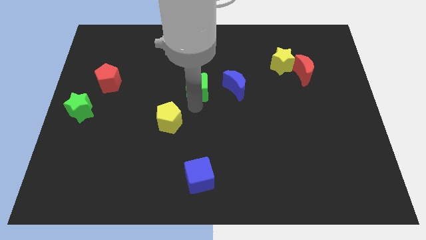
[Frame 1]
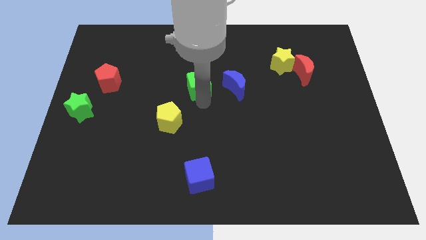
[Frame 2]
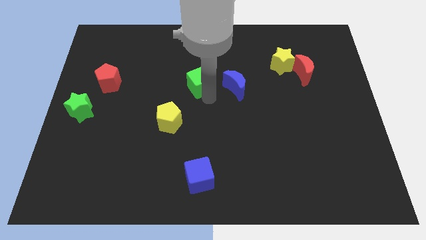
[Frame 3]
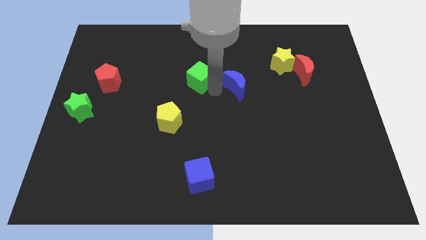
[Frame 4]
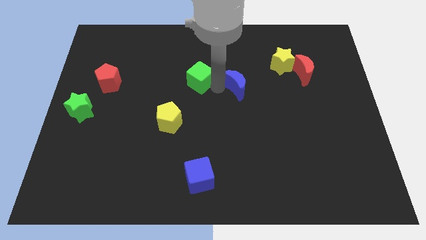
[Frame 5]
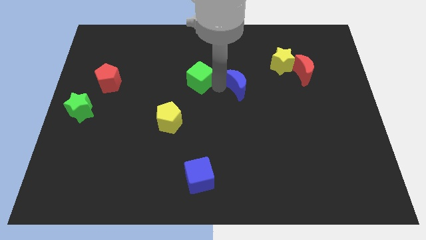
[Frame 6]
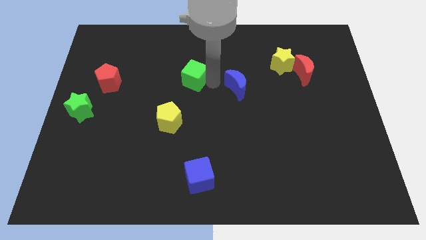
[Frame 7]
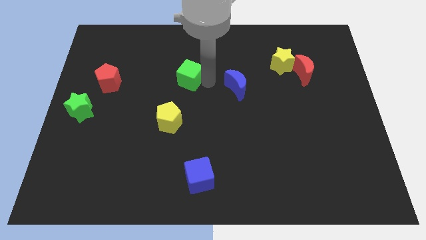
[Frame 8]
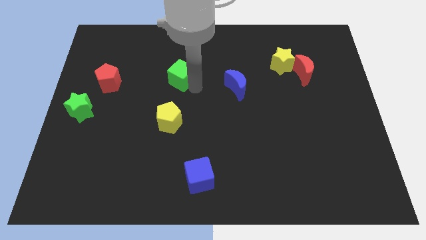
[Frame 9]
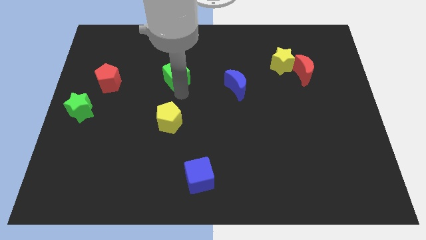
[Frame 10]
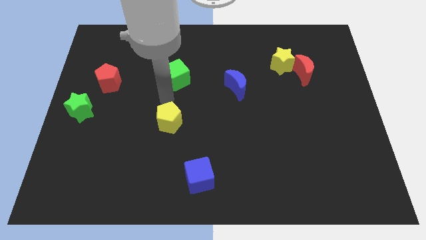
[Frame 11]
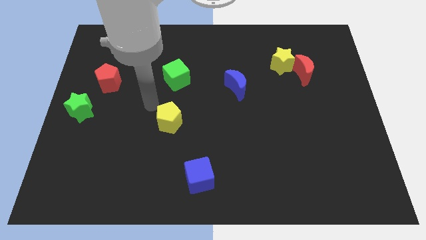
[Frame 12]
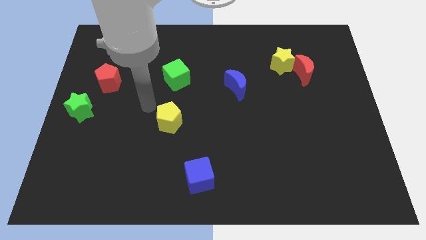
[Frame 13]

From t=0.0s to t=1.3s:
move the green cube vertically above the yellow pentagon

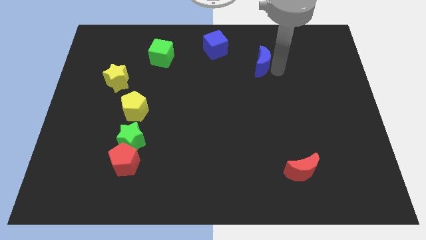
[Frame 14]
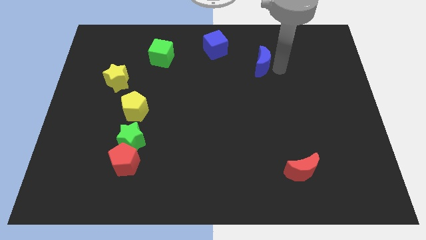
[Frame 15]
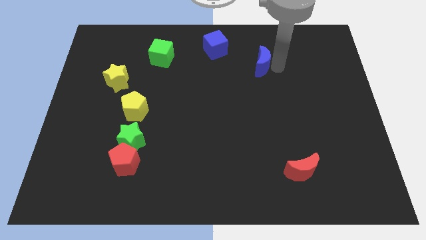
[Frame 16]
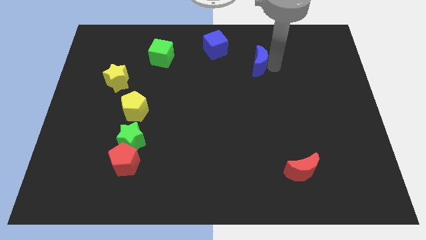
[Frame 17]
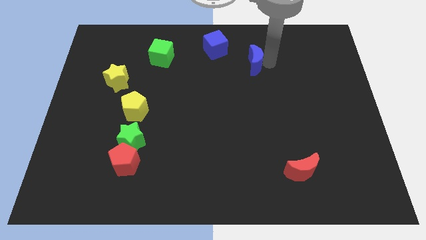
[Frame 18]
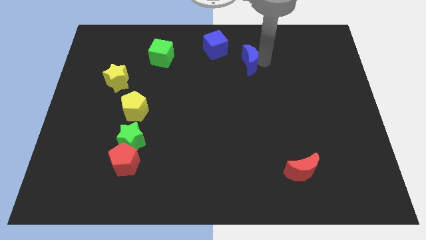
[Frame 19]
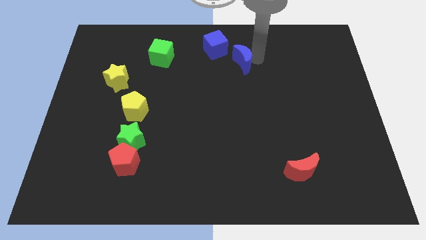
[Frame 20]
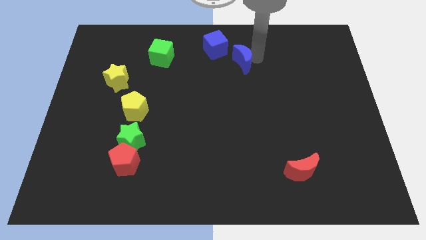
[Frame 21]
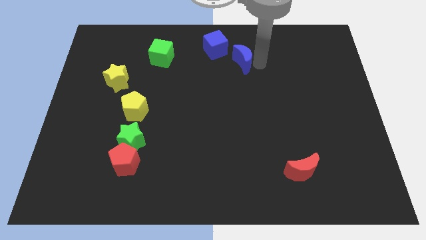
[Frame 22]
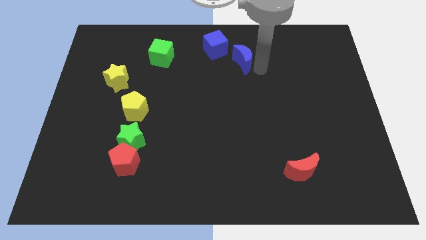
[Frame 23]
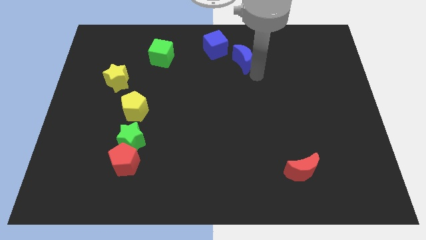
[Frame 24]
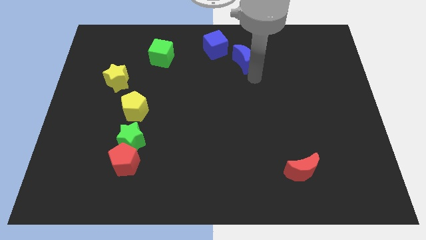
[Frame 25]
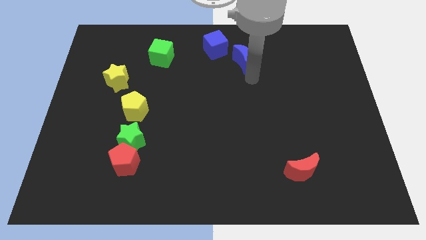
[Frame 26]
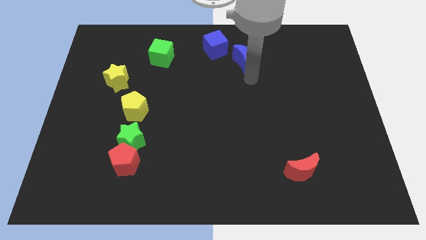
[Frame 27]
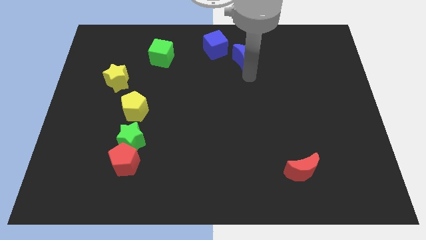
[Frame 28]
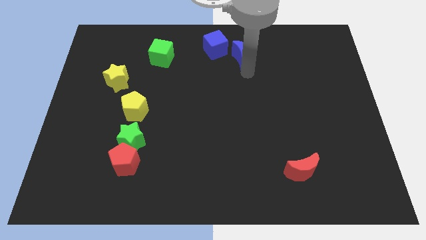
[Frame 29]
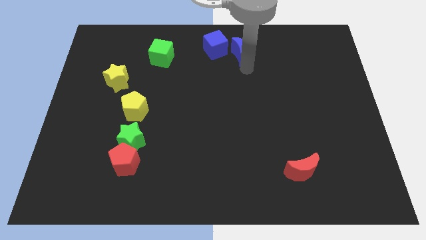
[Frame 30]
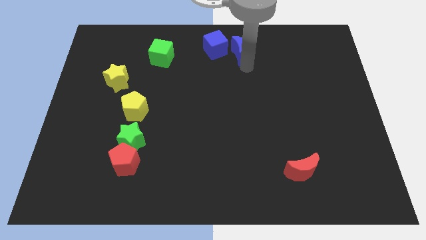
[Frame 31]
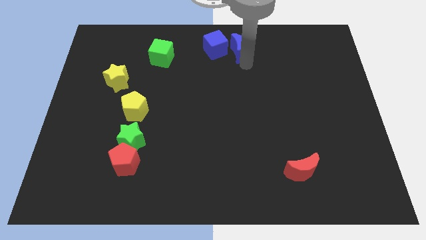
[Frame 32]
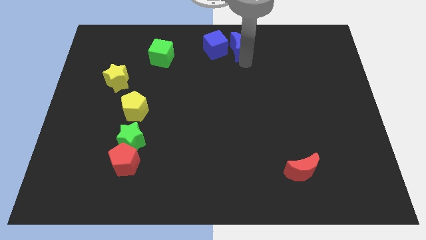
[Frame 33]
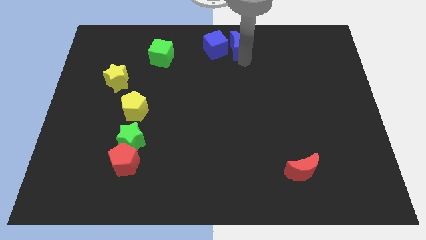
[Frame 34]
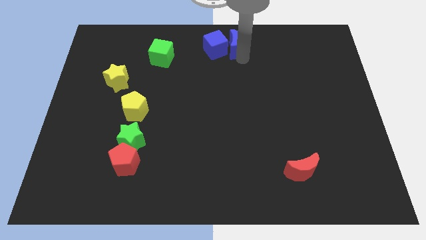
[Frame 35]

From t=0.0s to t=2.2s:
drag blue moon beside blue cube

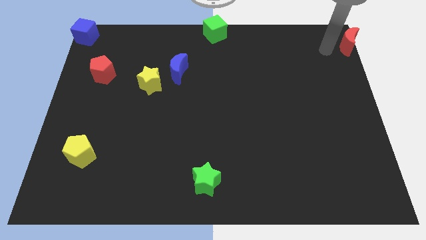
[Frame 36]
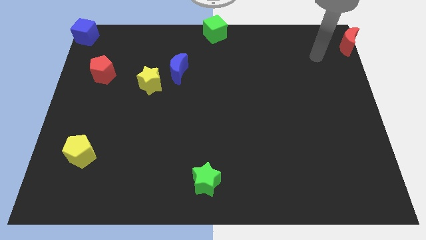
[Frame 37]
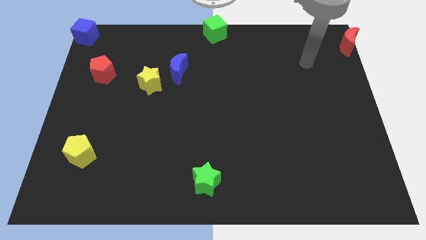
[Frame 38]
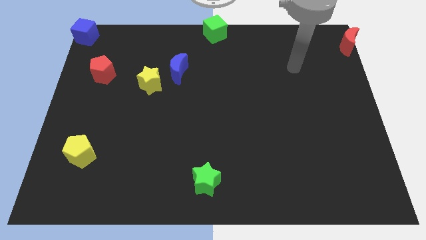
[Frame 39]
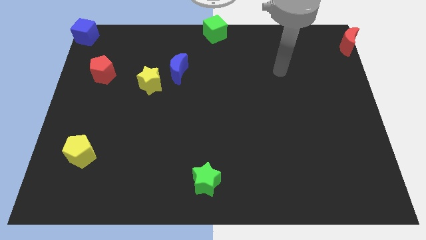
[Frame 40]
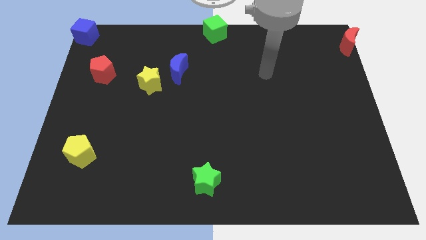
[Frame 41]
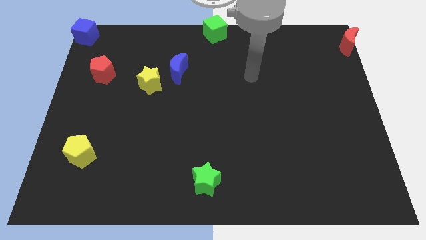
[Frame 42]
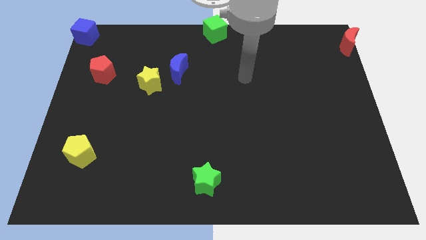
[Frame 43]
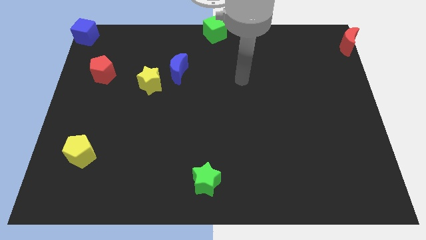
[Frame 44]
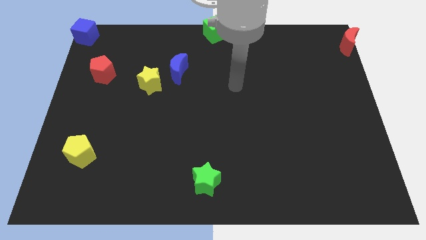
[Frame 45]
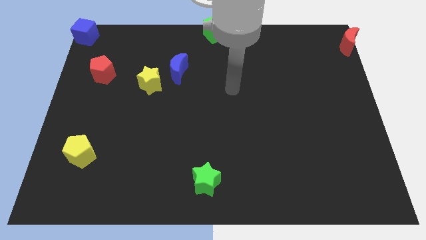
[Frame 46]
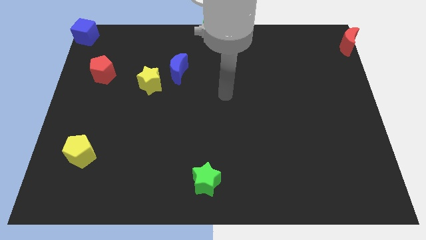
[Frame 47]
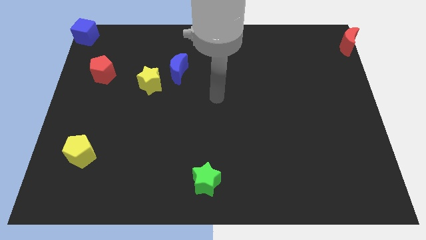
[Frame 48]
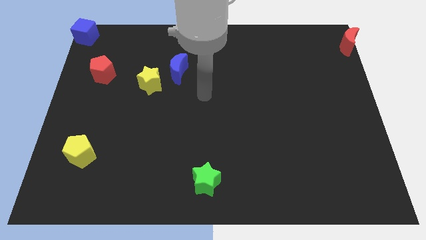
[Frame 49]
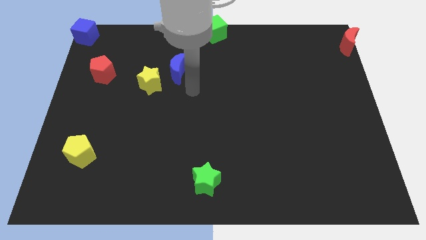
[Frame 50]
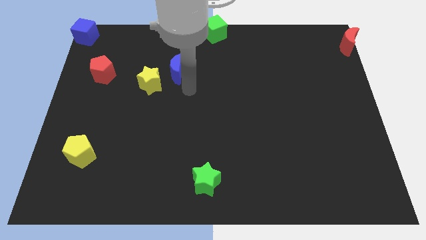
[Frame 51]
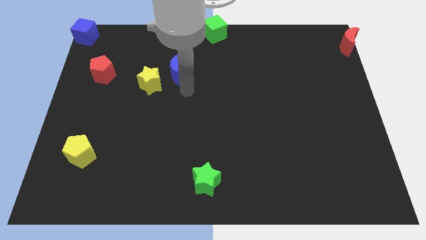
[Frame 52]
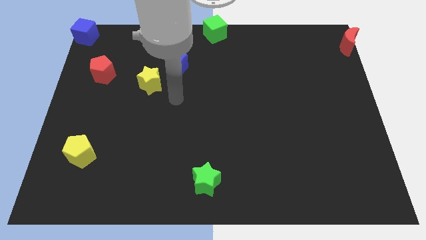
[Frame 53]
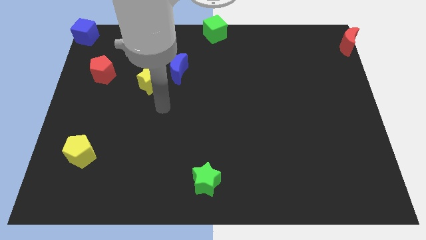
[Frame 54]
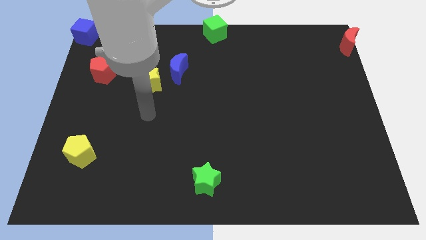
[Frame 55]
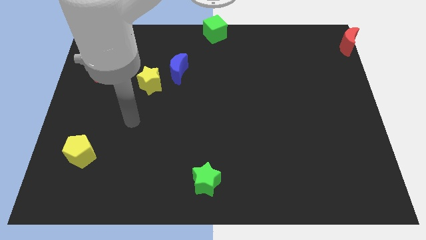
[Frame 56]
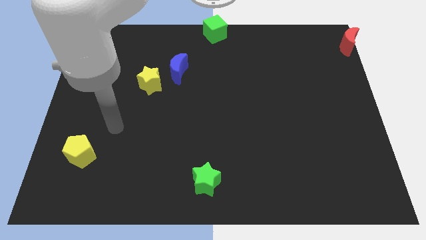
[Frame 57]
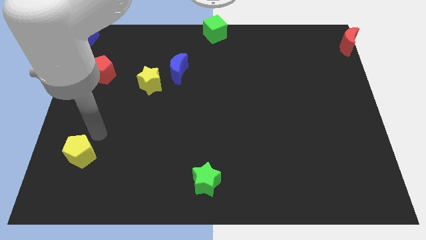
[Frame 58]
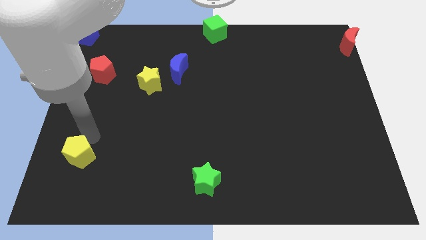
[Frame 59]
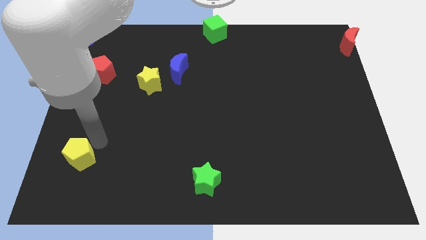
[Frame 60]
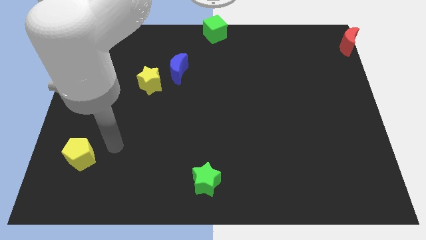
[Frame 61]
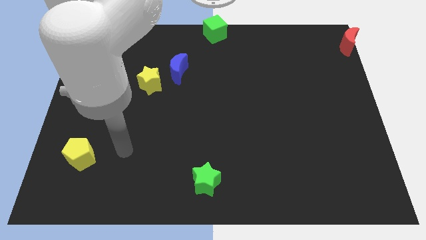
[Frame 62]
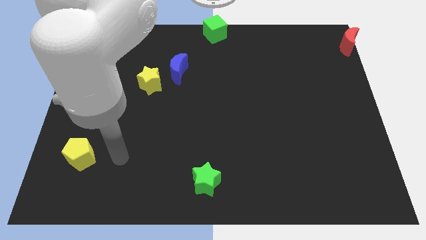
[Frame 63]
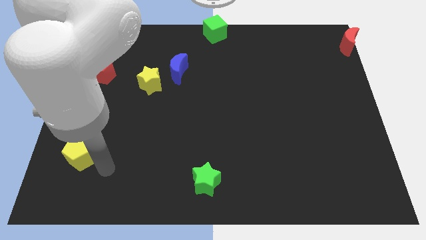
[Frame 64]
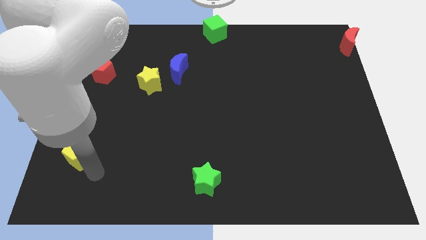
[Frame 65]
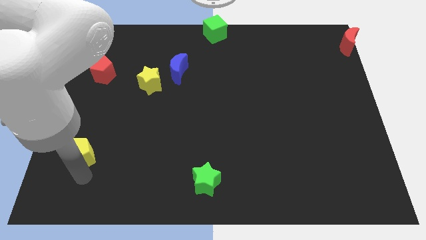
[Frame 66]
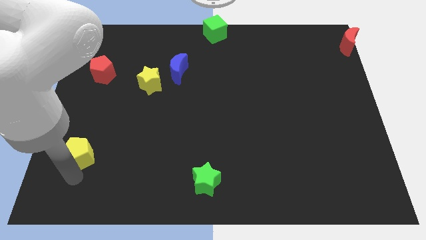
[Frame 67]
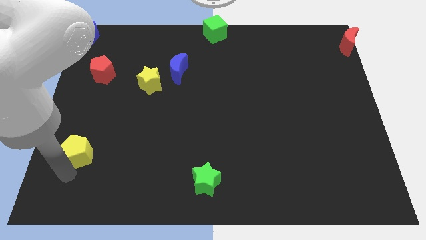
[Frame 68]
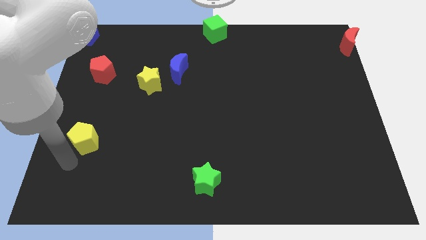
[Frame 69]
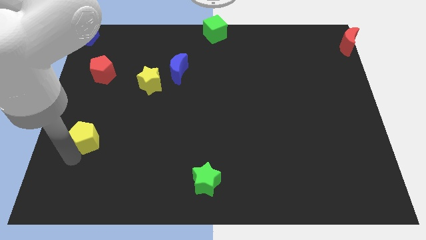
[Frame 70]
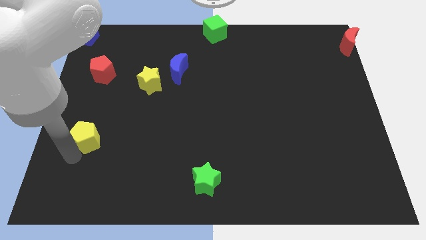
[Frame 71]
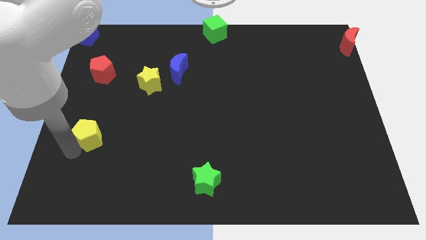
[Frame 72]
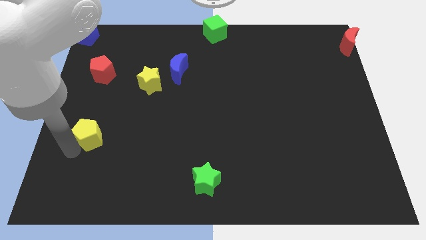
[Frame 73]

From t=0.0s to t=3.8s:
push slightly the yellow pentagon upwards

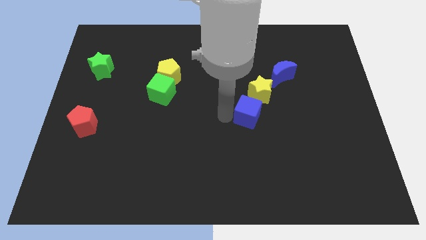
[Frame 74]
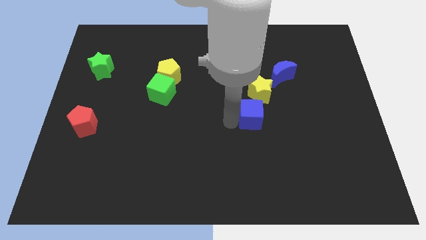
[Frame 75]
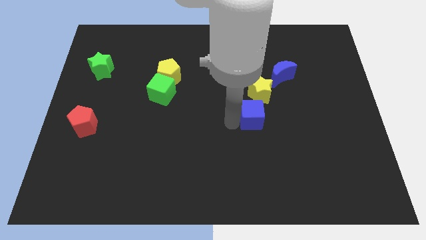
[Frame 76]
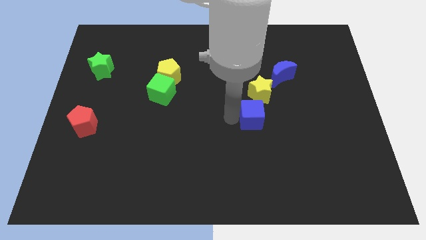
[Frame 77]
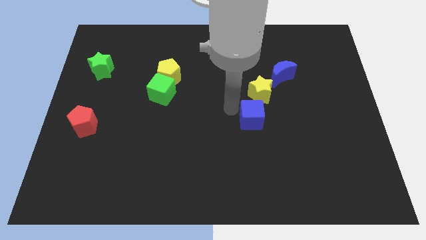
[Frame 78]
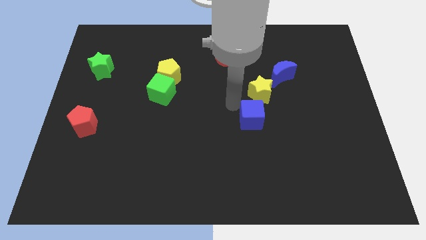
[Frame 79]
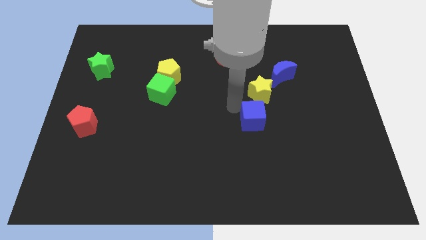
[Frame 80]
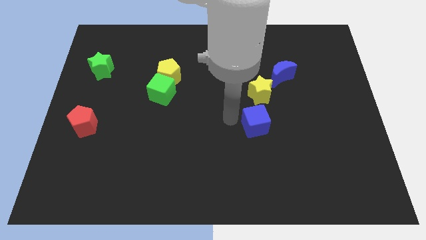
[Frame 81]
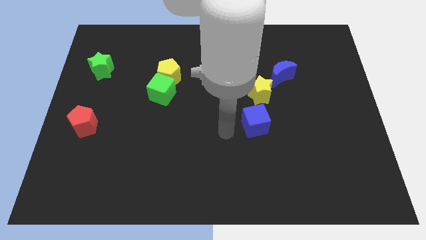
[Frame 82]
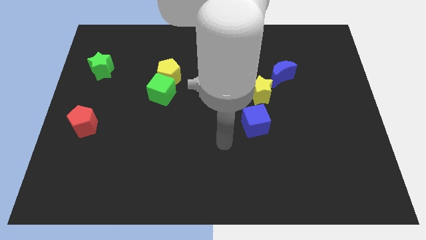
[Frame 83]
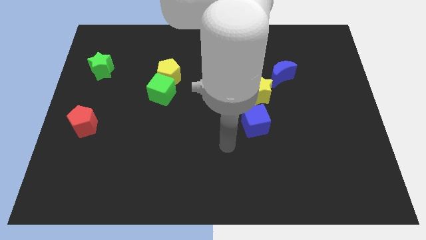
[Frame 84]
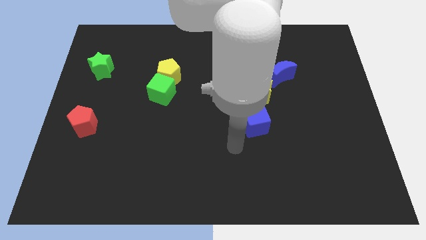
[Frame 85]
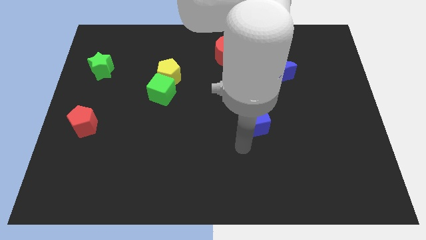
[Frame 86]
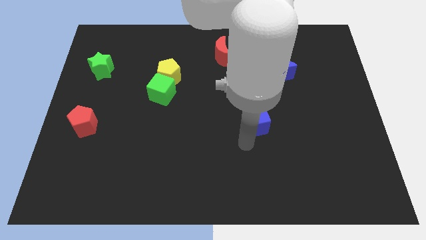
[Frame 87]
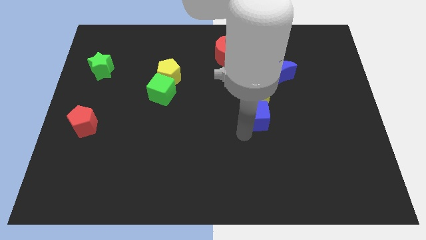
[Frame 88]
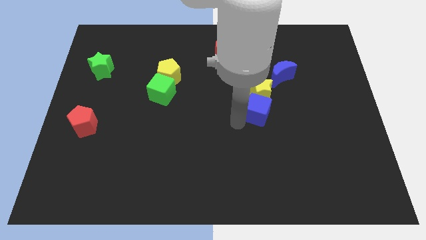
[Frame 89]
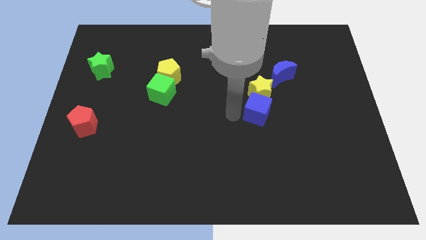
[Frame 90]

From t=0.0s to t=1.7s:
move the blue cube into the yellow star
